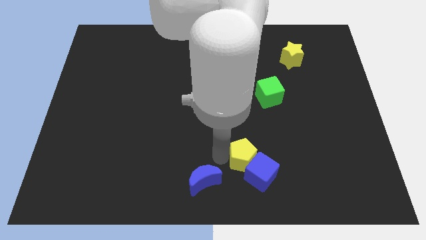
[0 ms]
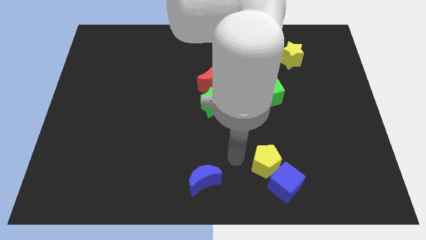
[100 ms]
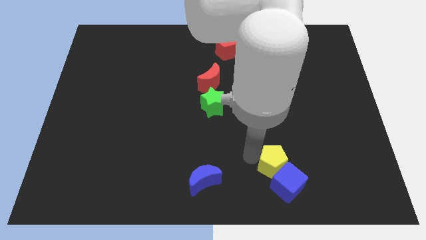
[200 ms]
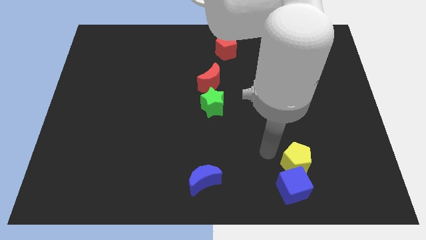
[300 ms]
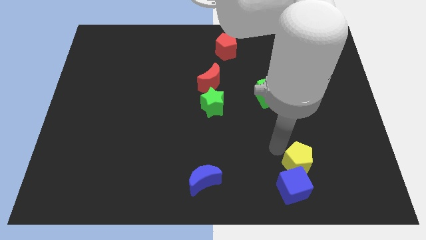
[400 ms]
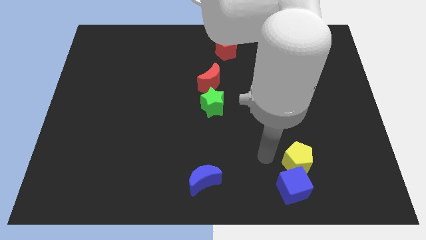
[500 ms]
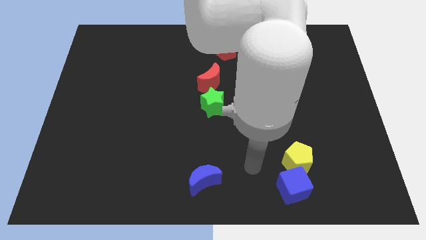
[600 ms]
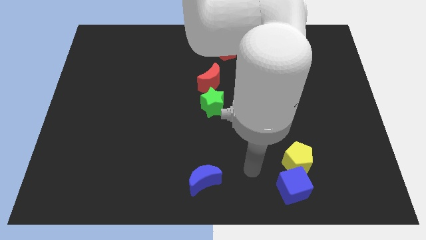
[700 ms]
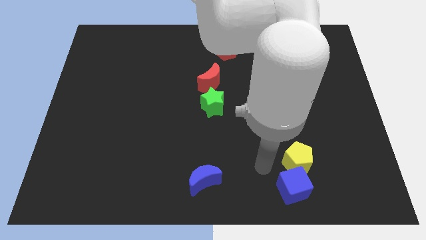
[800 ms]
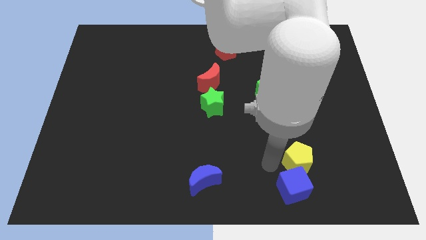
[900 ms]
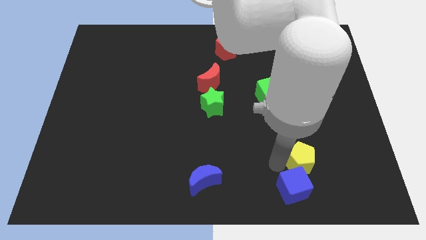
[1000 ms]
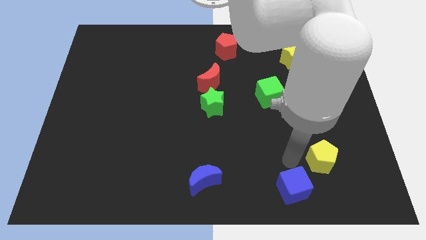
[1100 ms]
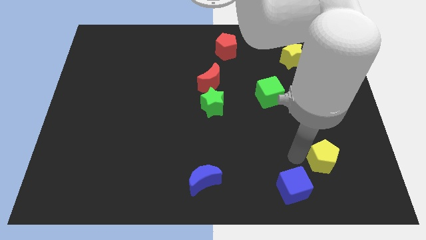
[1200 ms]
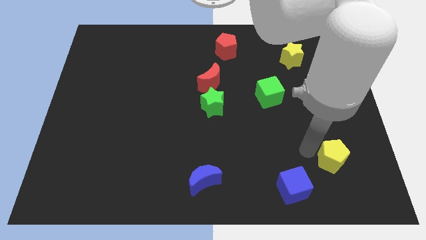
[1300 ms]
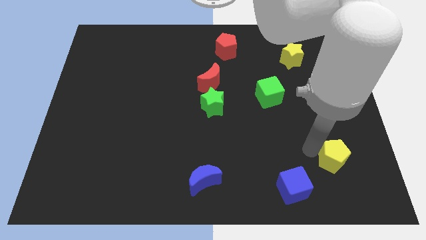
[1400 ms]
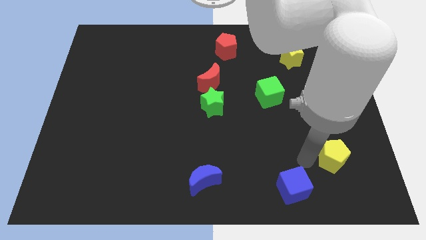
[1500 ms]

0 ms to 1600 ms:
move the yellow pentagon towards the right bottom corner

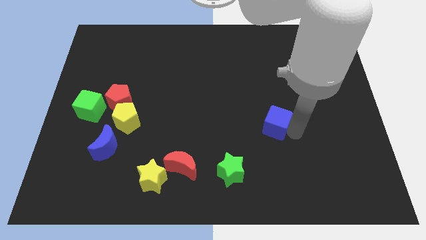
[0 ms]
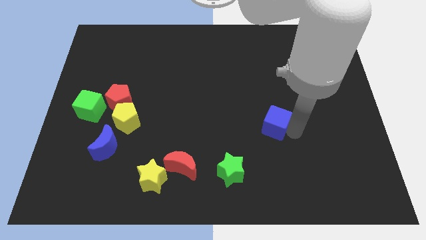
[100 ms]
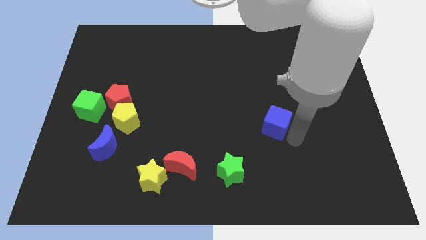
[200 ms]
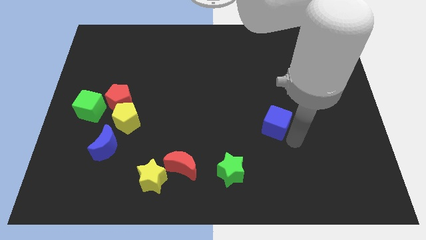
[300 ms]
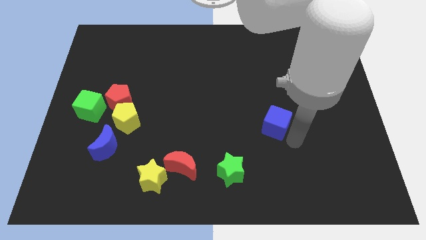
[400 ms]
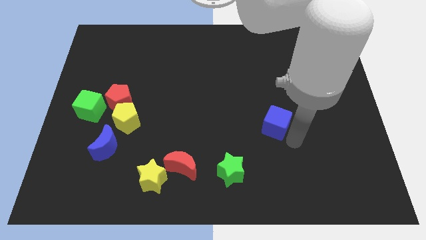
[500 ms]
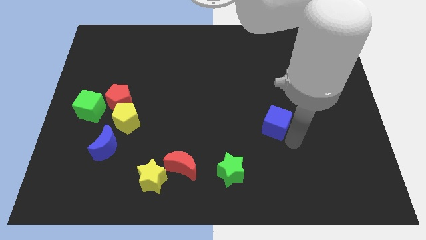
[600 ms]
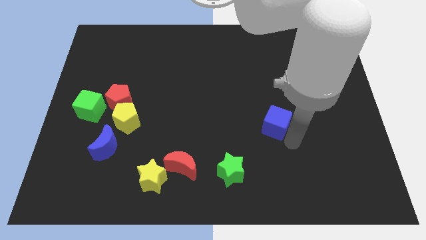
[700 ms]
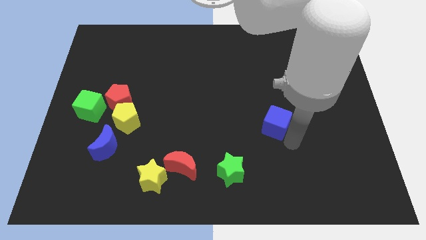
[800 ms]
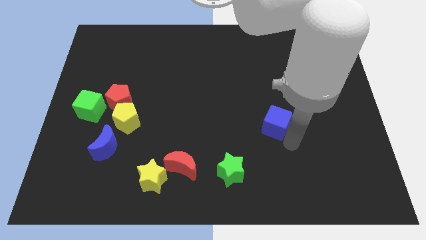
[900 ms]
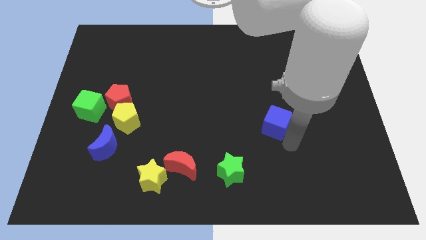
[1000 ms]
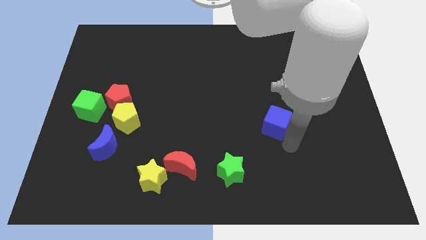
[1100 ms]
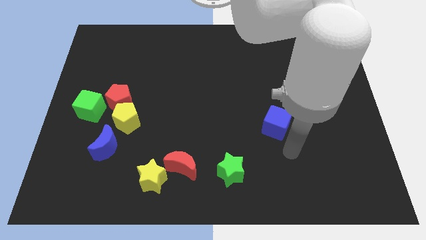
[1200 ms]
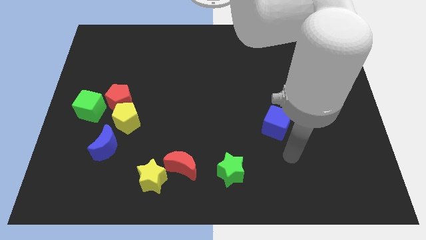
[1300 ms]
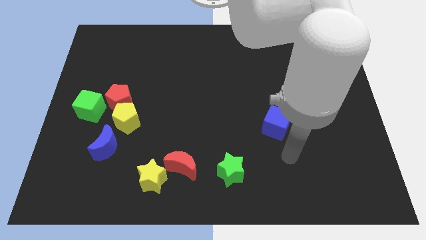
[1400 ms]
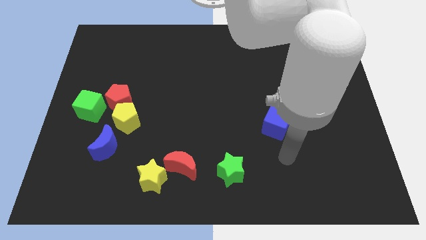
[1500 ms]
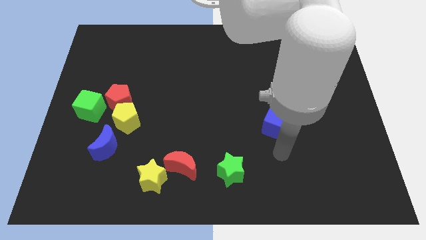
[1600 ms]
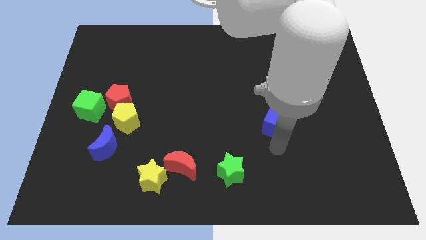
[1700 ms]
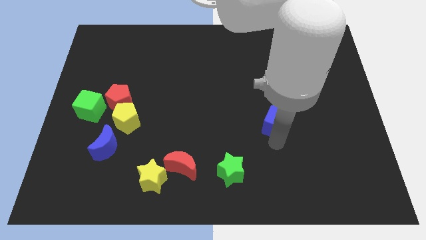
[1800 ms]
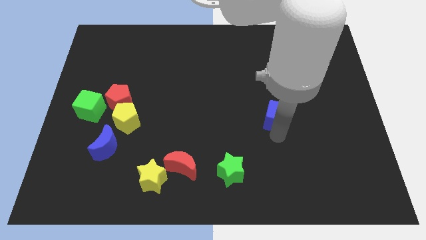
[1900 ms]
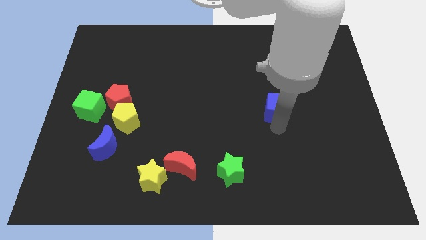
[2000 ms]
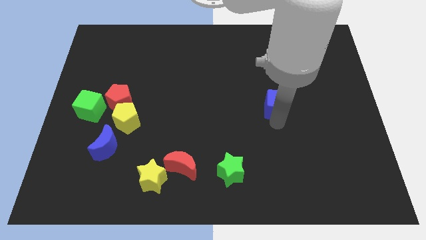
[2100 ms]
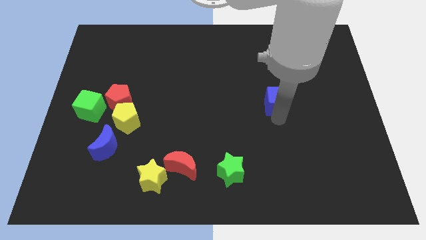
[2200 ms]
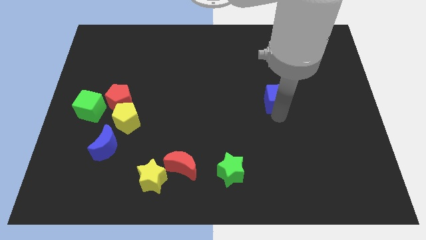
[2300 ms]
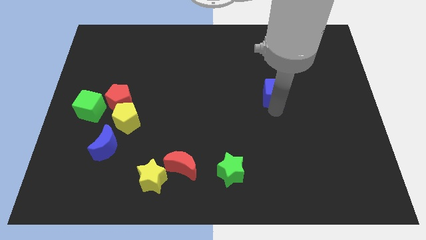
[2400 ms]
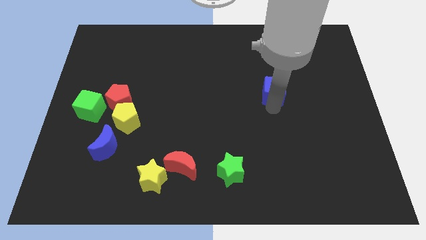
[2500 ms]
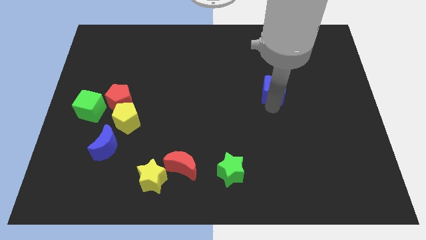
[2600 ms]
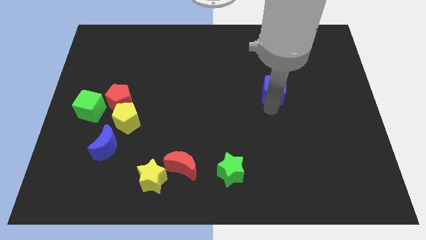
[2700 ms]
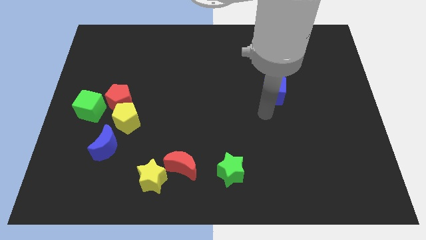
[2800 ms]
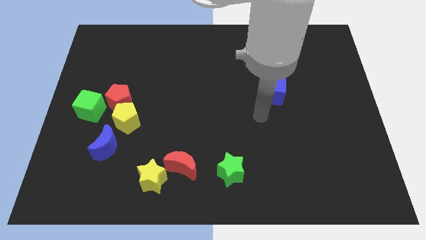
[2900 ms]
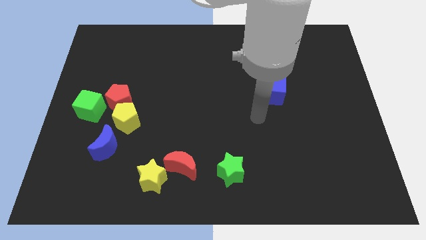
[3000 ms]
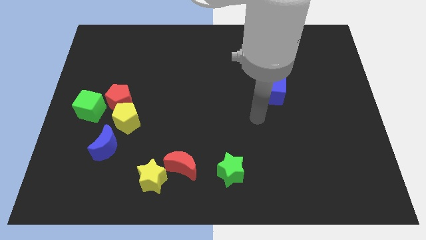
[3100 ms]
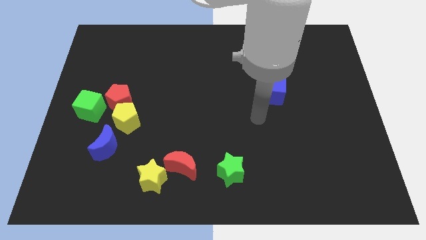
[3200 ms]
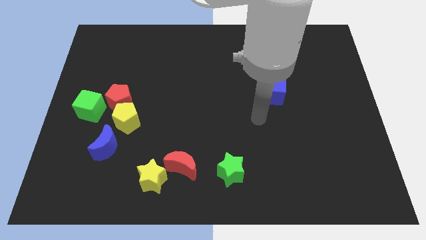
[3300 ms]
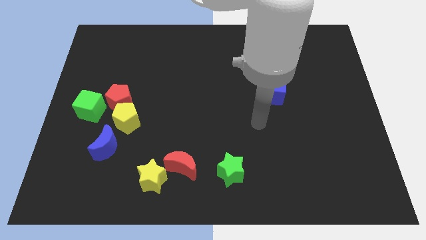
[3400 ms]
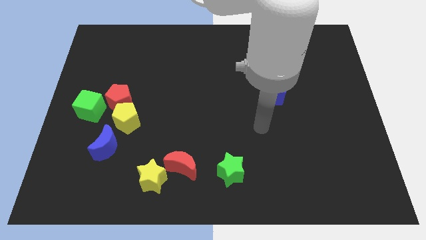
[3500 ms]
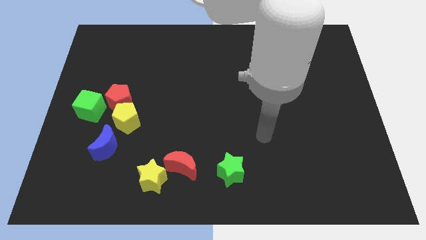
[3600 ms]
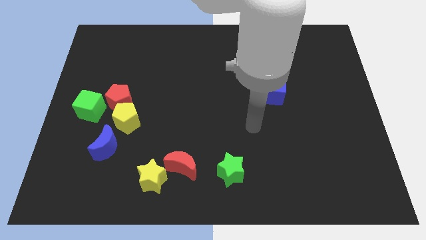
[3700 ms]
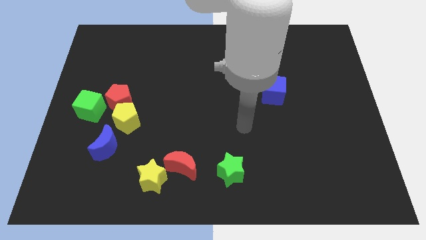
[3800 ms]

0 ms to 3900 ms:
push the blue cube towards the top right

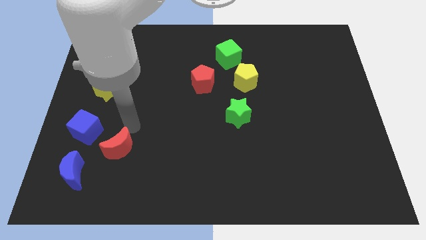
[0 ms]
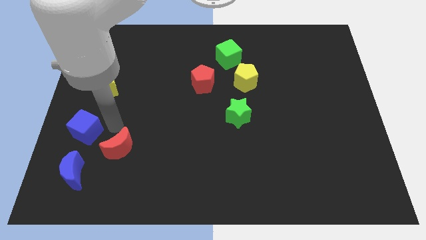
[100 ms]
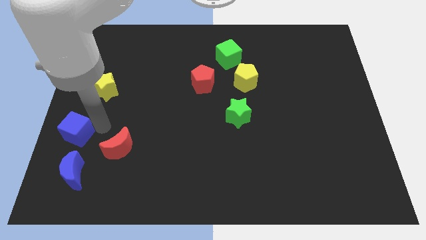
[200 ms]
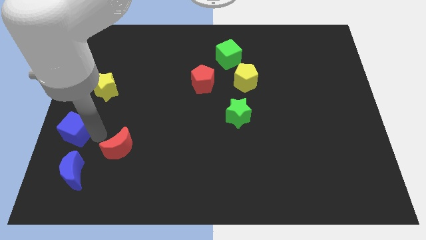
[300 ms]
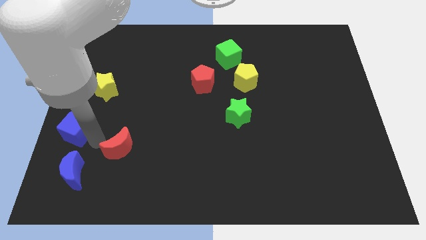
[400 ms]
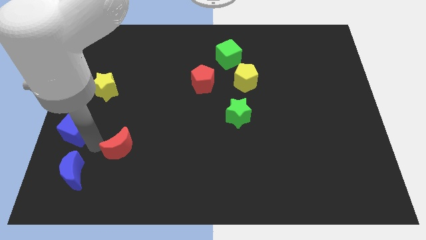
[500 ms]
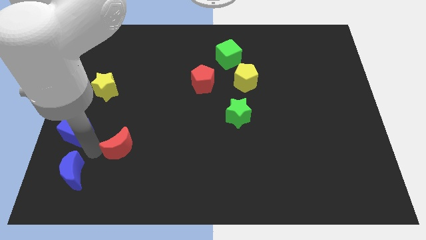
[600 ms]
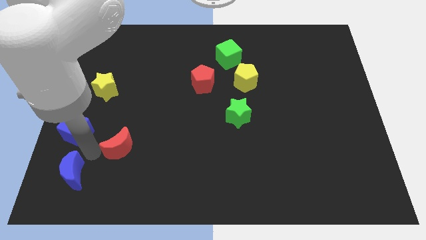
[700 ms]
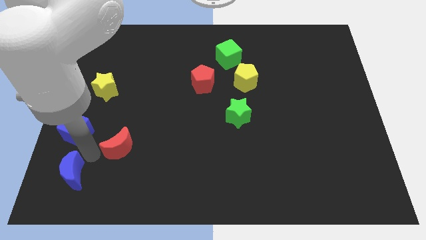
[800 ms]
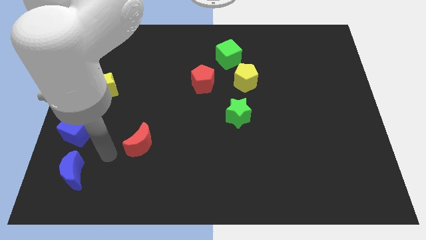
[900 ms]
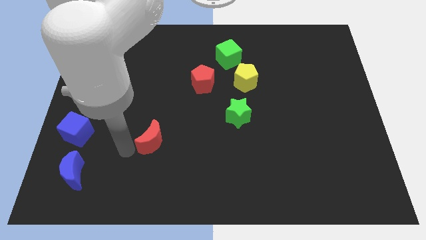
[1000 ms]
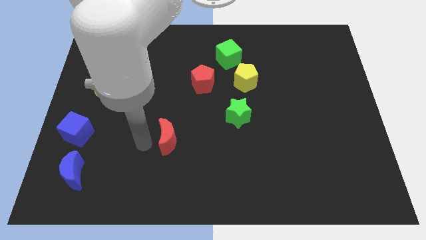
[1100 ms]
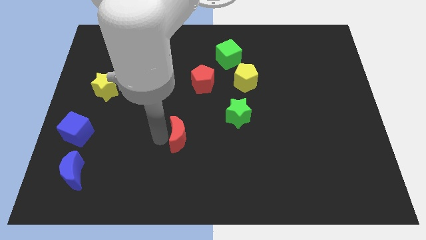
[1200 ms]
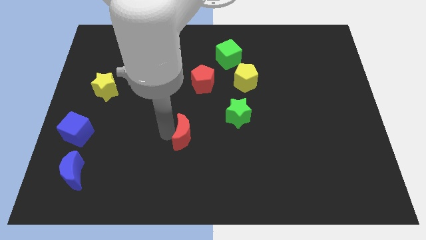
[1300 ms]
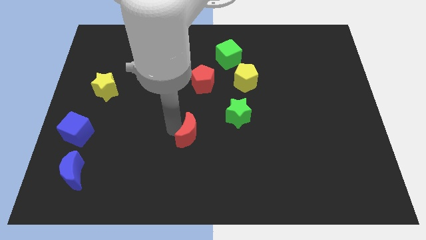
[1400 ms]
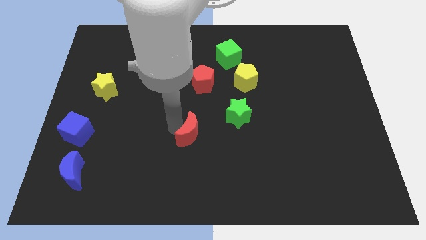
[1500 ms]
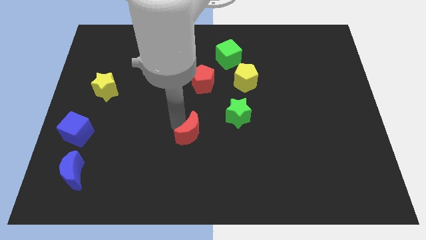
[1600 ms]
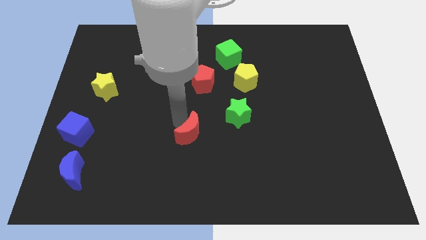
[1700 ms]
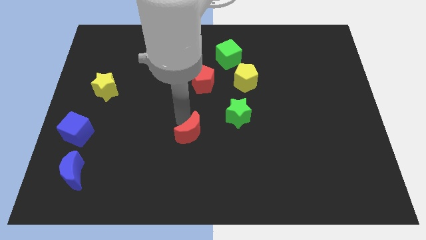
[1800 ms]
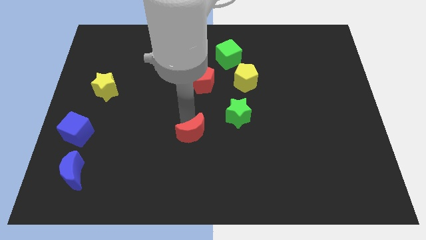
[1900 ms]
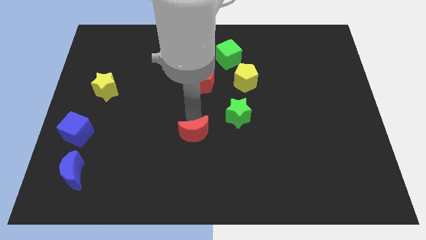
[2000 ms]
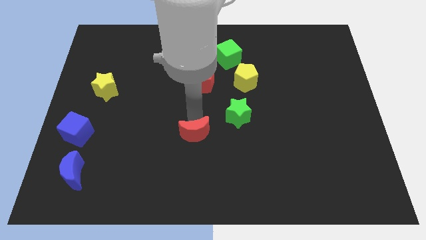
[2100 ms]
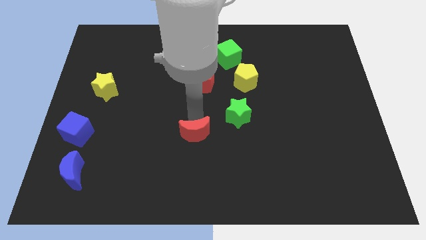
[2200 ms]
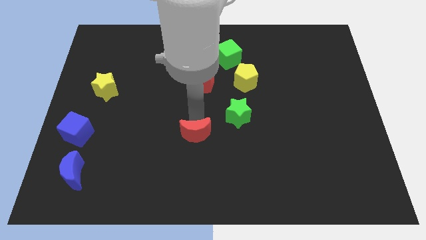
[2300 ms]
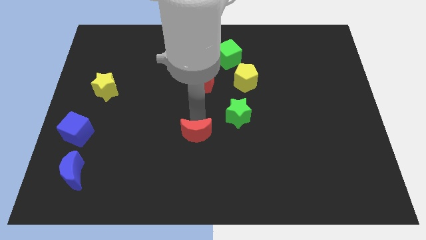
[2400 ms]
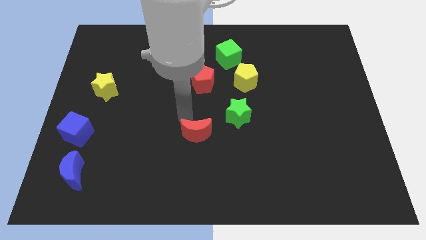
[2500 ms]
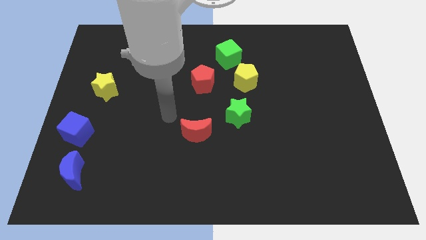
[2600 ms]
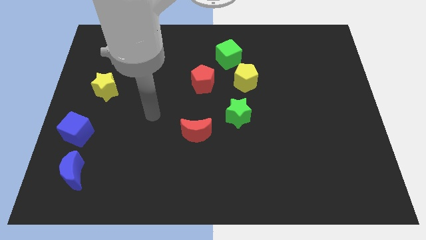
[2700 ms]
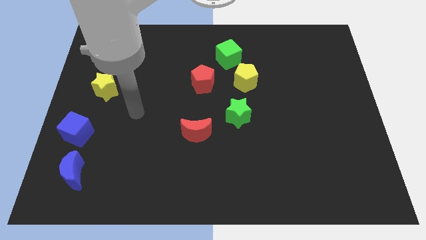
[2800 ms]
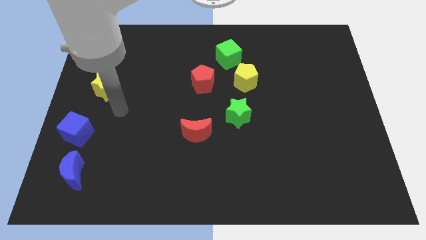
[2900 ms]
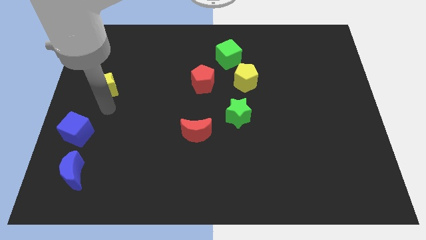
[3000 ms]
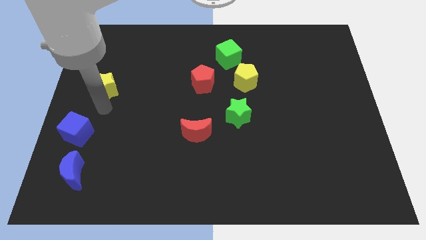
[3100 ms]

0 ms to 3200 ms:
place the red moon parallel to the bottom of the red pentagon

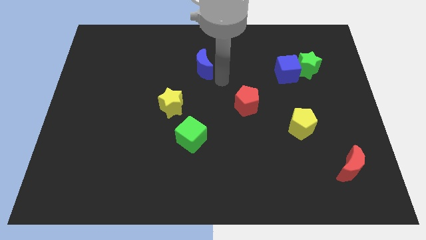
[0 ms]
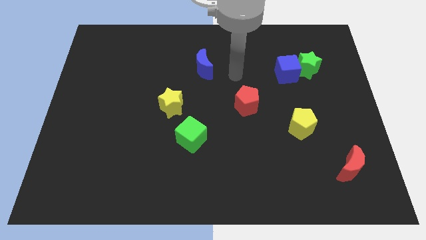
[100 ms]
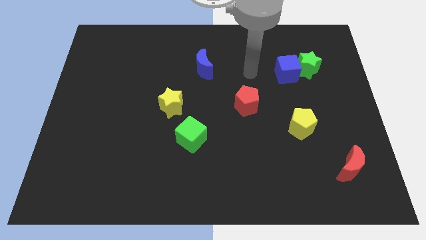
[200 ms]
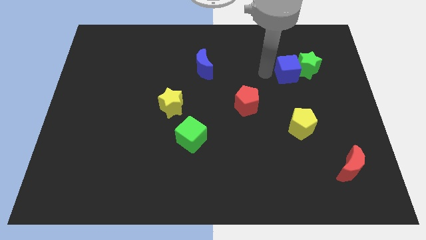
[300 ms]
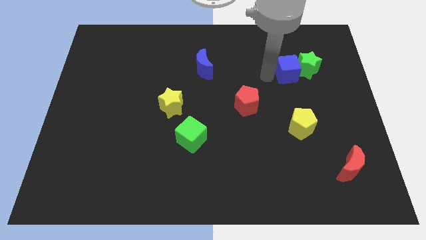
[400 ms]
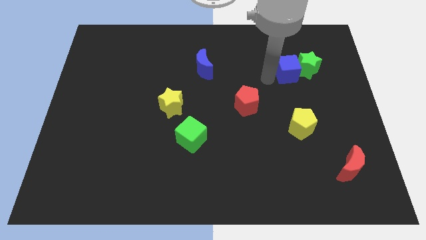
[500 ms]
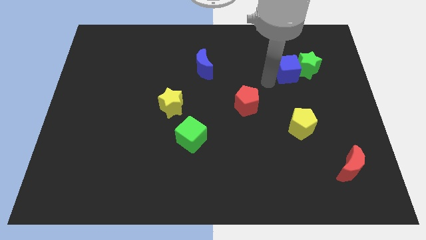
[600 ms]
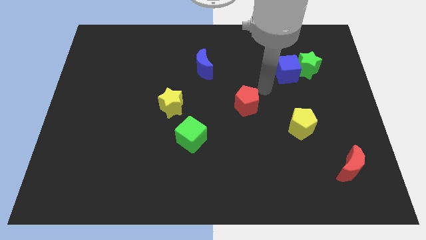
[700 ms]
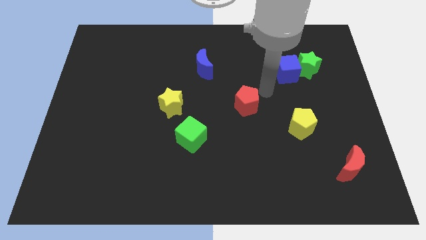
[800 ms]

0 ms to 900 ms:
go away from the blue moon
